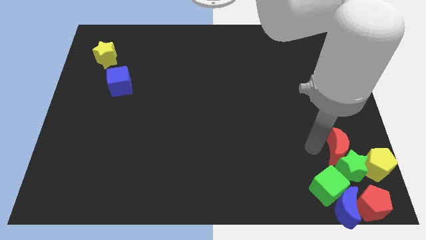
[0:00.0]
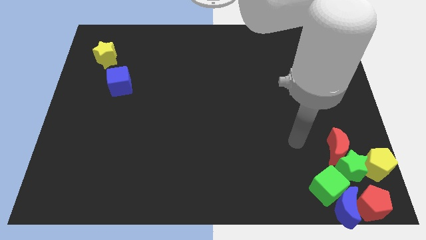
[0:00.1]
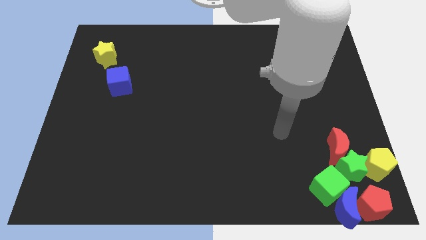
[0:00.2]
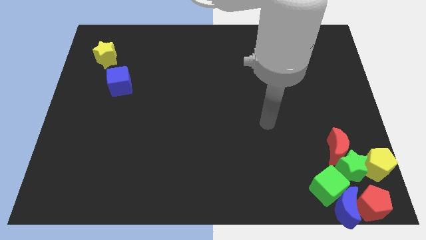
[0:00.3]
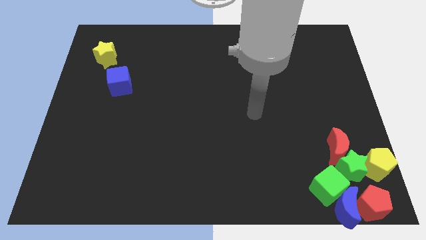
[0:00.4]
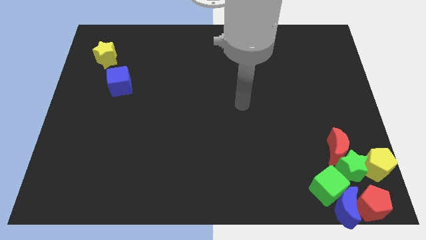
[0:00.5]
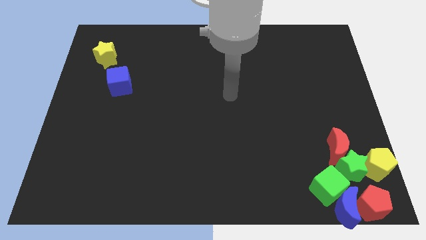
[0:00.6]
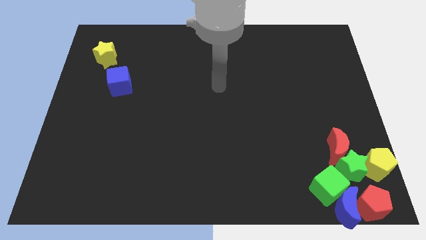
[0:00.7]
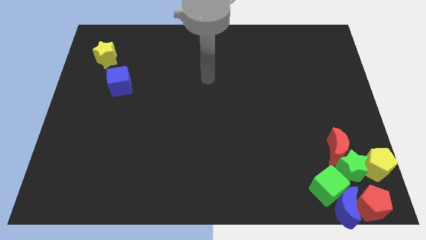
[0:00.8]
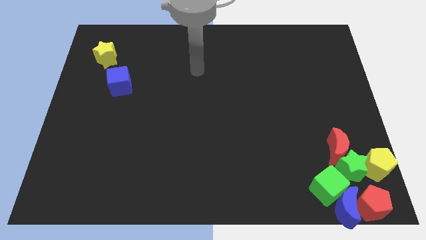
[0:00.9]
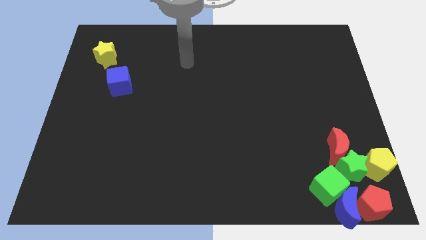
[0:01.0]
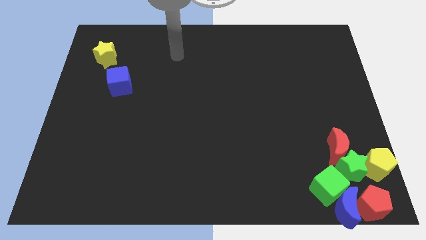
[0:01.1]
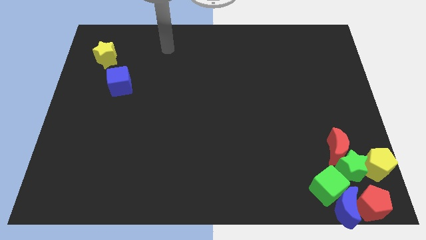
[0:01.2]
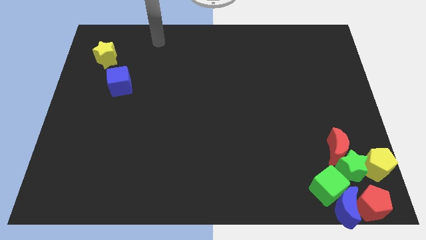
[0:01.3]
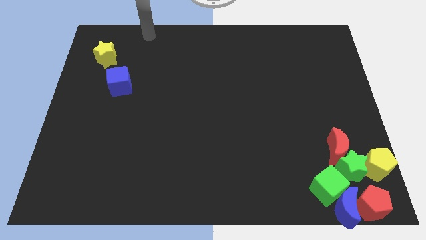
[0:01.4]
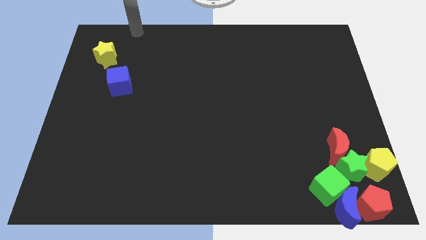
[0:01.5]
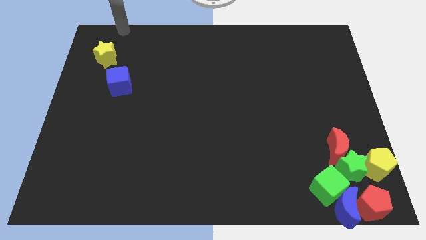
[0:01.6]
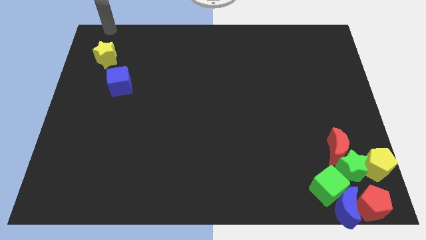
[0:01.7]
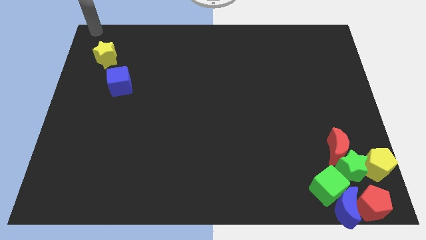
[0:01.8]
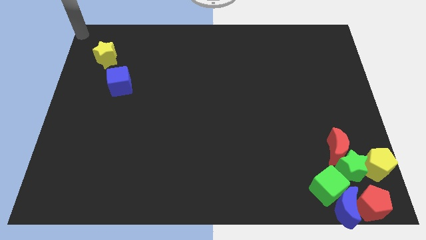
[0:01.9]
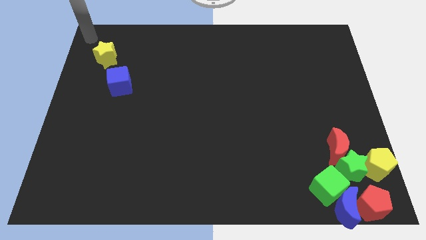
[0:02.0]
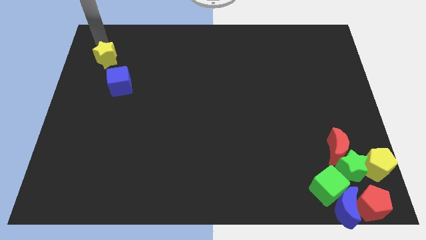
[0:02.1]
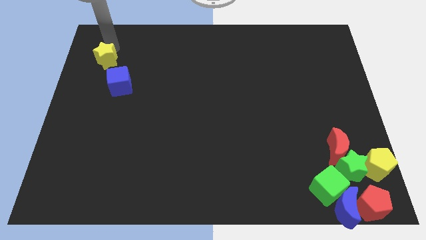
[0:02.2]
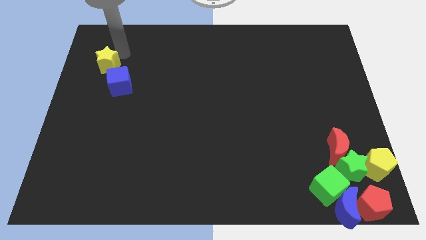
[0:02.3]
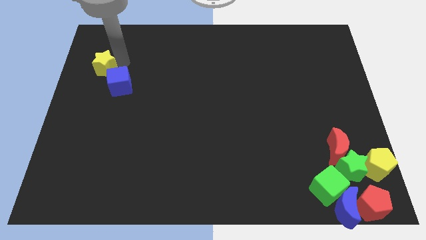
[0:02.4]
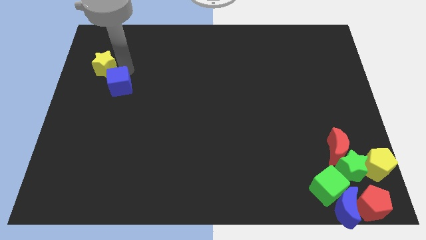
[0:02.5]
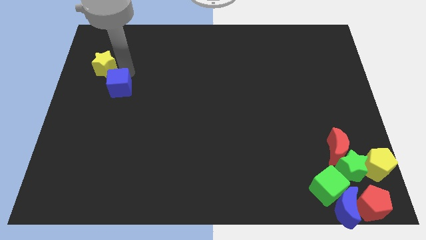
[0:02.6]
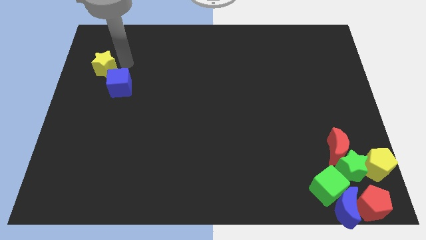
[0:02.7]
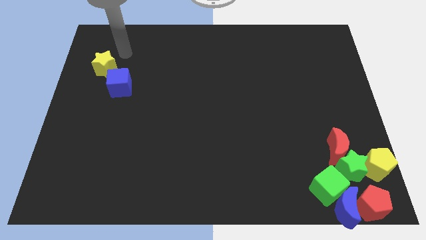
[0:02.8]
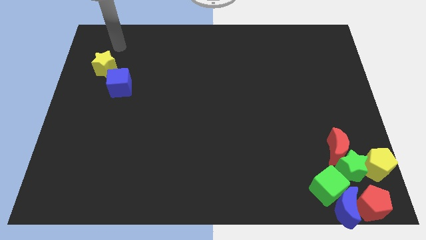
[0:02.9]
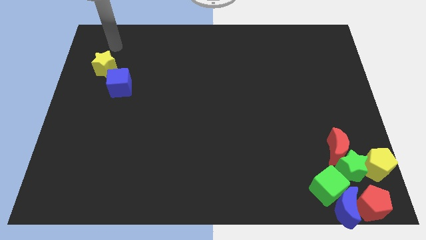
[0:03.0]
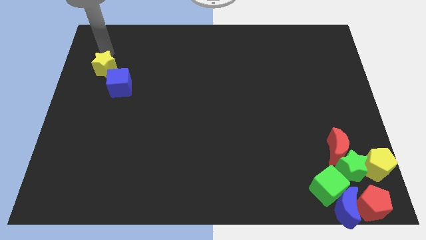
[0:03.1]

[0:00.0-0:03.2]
push the yellow star into the blue cube

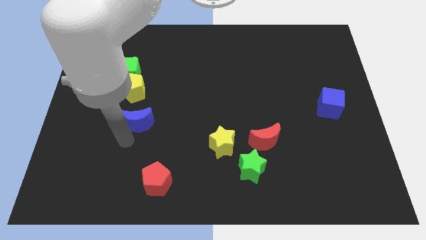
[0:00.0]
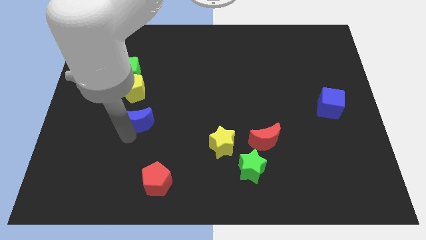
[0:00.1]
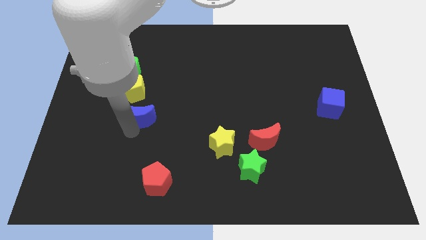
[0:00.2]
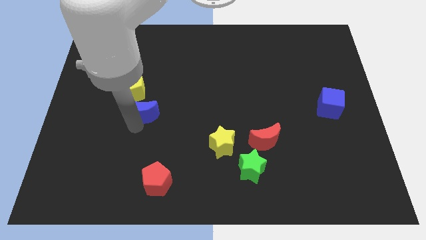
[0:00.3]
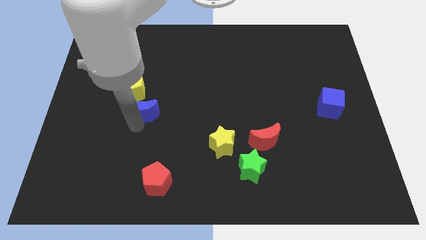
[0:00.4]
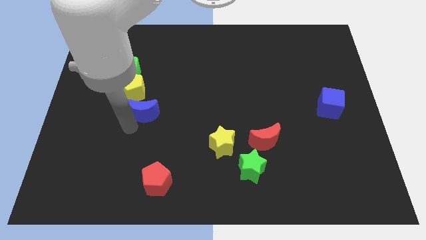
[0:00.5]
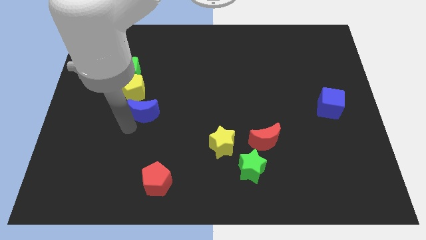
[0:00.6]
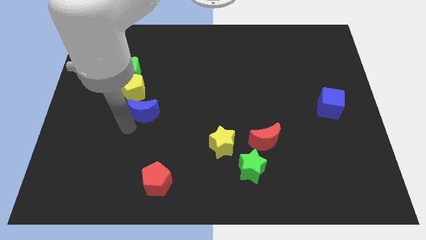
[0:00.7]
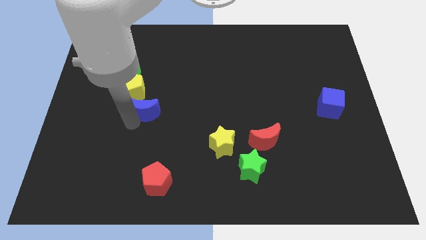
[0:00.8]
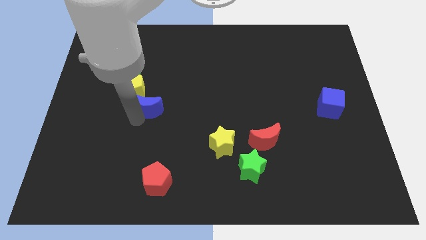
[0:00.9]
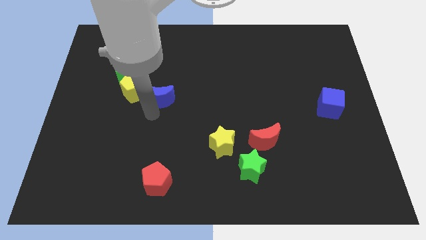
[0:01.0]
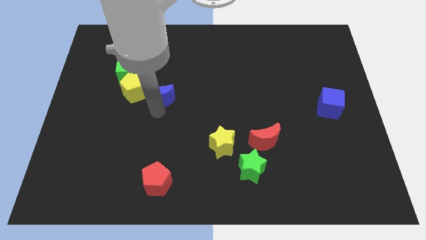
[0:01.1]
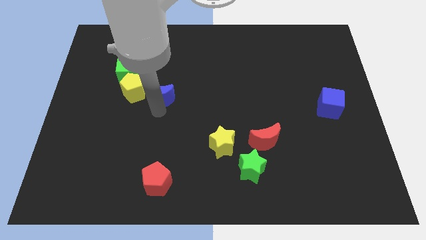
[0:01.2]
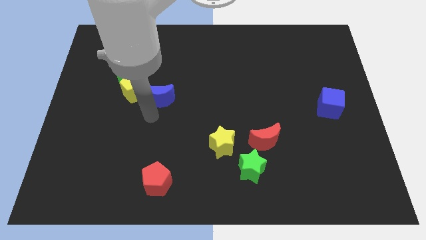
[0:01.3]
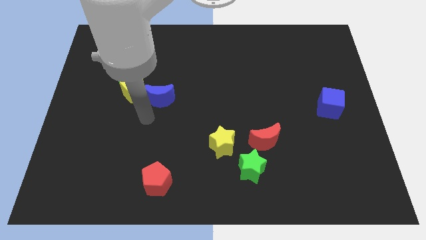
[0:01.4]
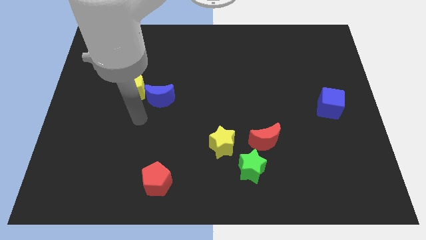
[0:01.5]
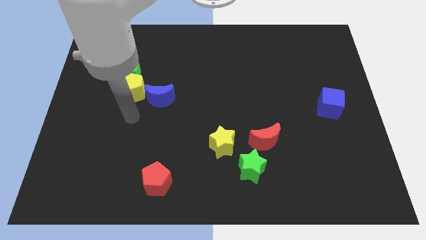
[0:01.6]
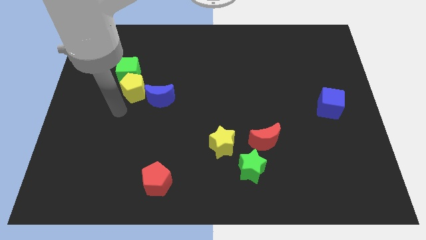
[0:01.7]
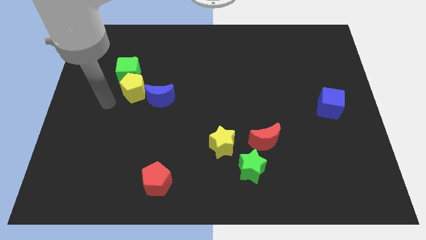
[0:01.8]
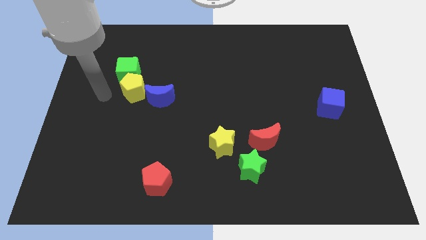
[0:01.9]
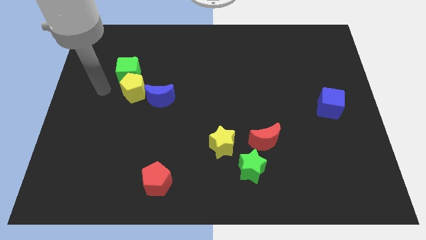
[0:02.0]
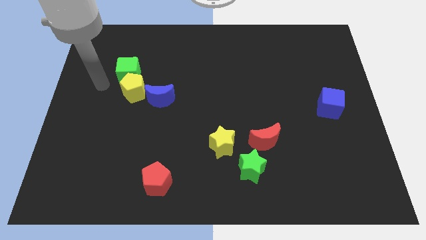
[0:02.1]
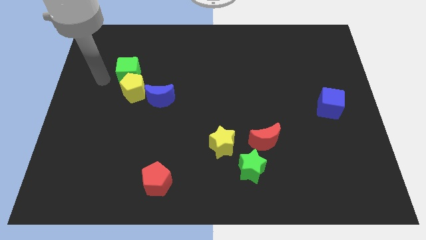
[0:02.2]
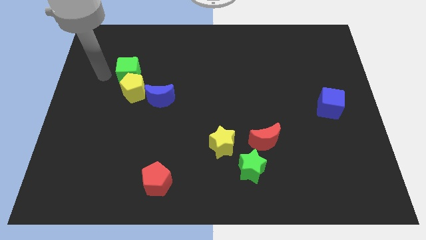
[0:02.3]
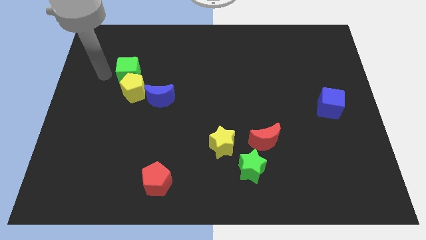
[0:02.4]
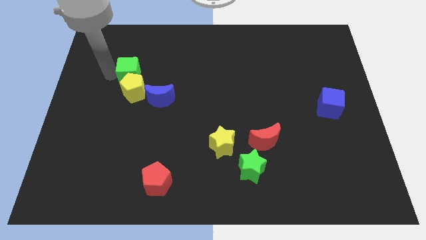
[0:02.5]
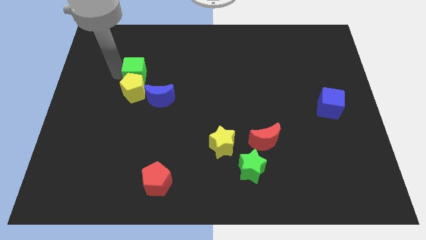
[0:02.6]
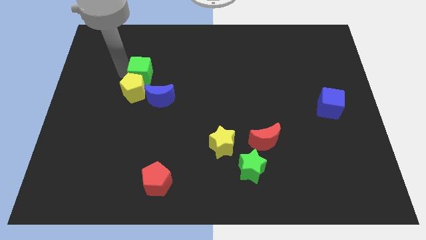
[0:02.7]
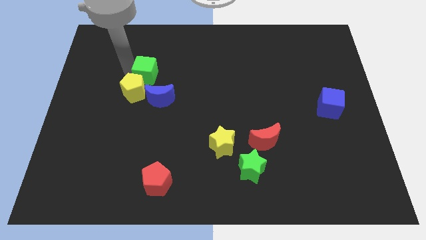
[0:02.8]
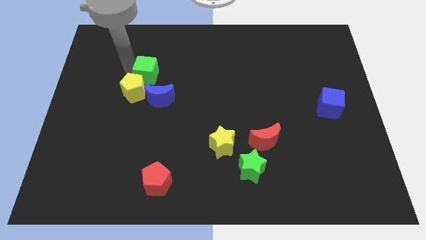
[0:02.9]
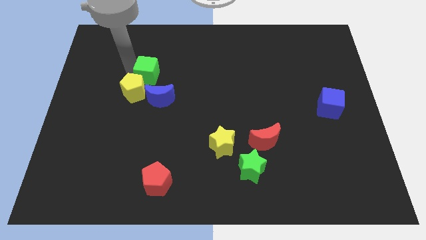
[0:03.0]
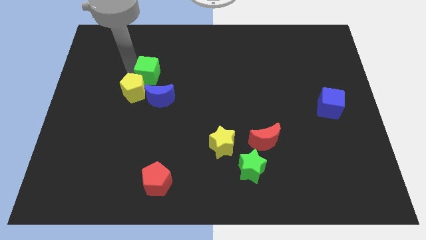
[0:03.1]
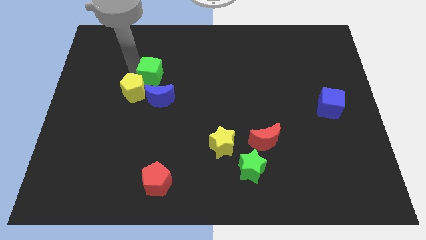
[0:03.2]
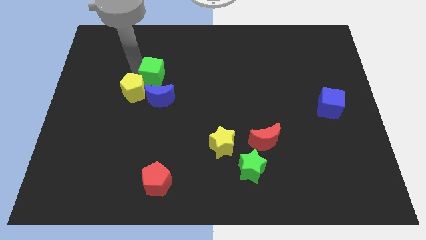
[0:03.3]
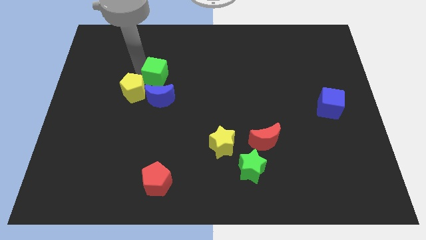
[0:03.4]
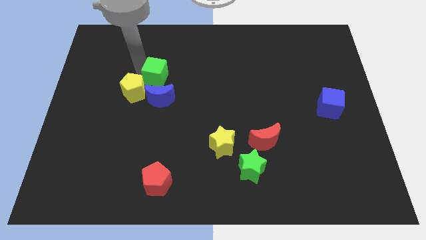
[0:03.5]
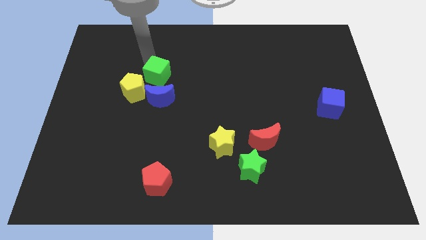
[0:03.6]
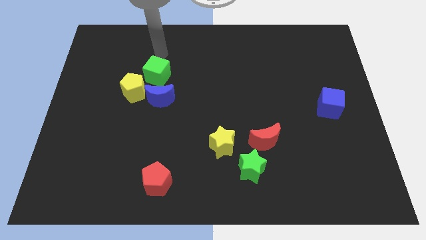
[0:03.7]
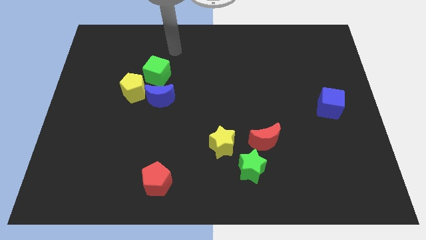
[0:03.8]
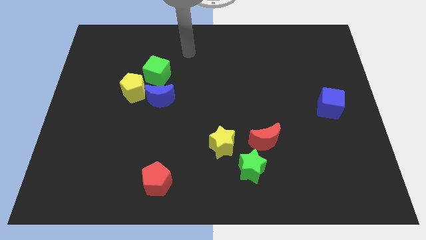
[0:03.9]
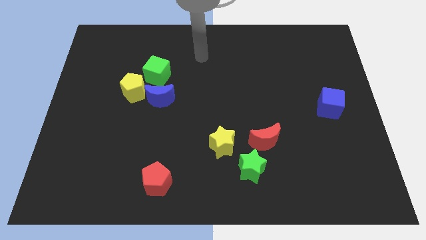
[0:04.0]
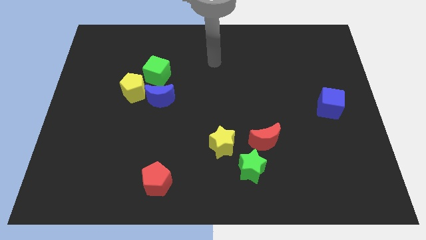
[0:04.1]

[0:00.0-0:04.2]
place green cube to the top of blue moon

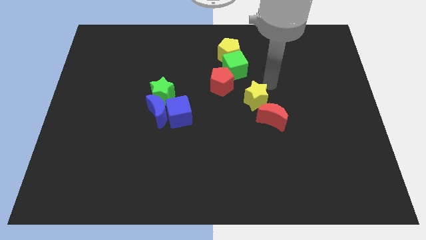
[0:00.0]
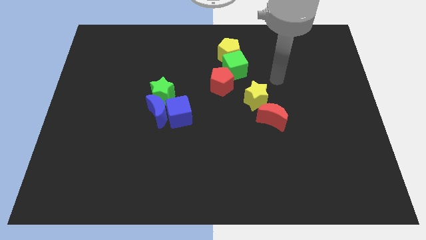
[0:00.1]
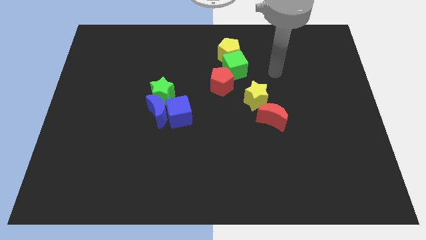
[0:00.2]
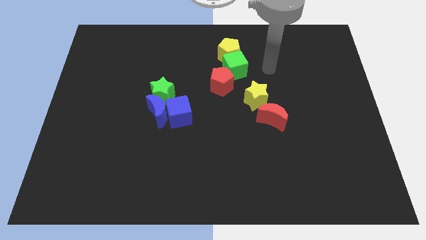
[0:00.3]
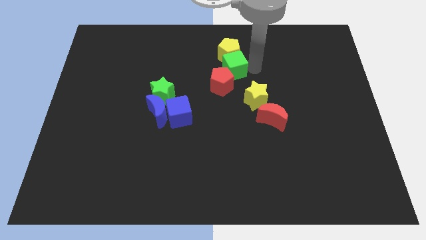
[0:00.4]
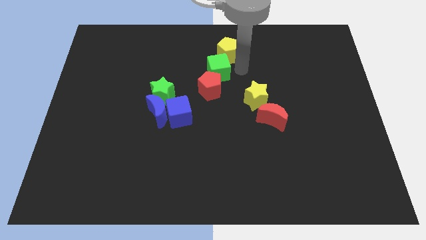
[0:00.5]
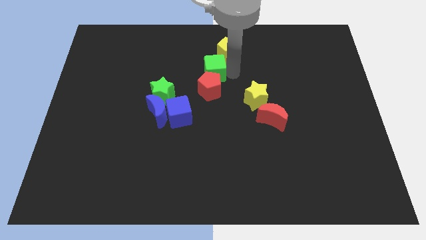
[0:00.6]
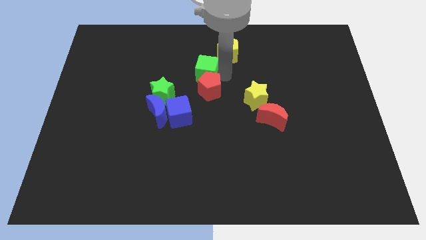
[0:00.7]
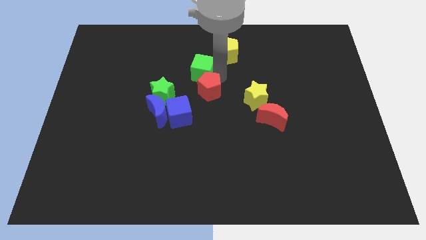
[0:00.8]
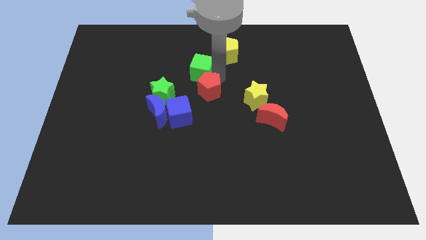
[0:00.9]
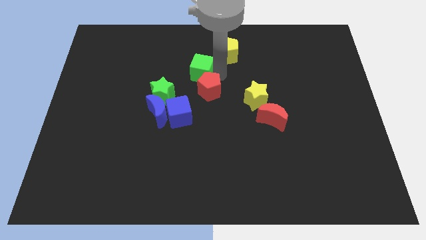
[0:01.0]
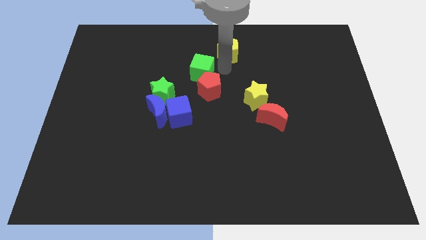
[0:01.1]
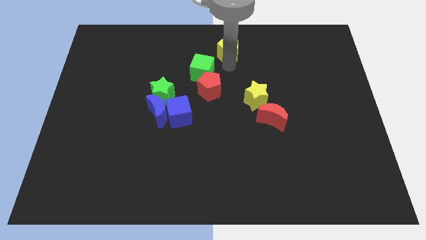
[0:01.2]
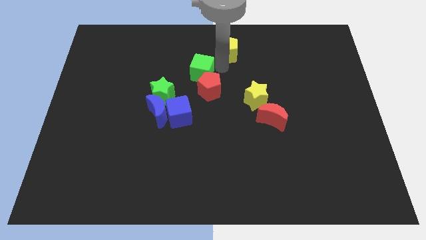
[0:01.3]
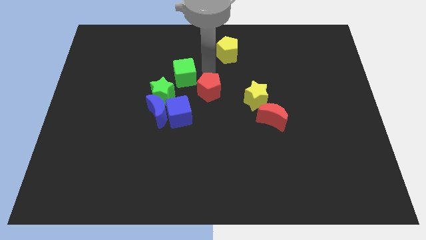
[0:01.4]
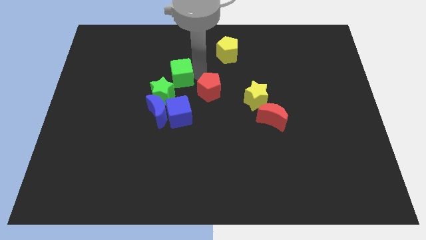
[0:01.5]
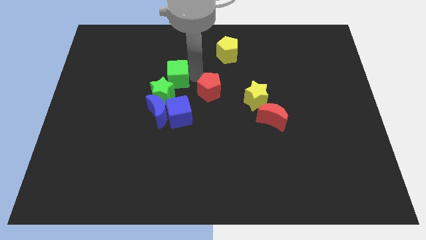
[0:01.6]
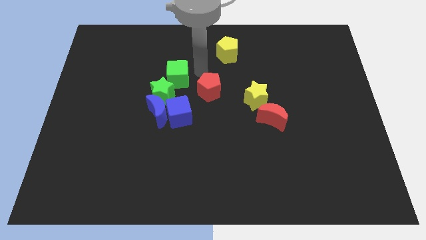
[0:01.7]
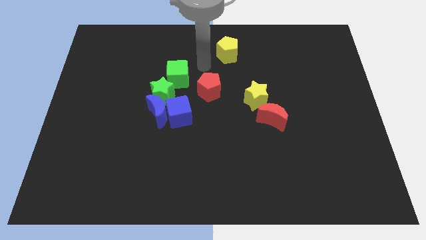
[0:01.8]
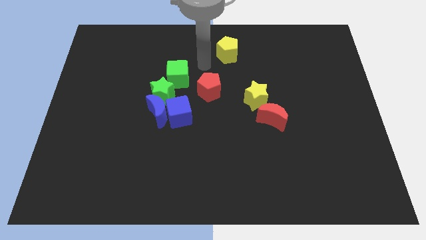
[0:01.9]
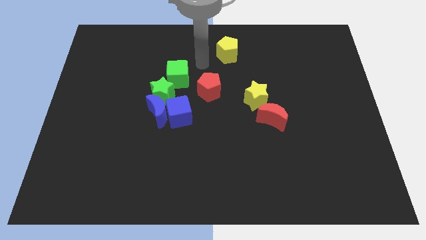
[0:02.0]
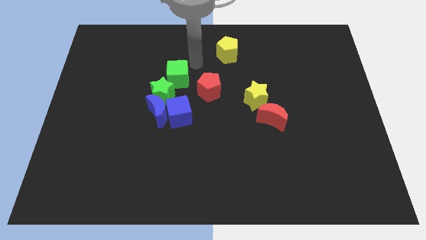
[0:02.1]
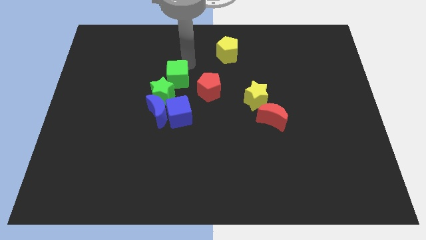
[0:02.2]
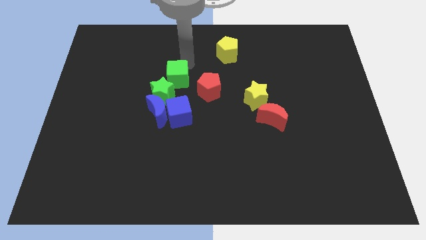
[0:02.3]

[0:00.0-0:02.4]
move the green cube above the green star
